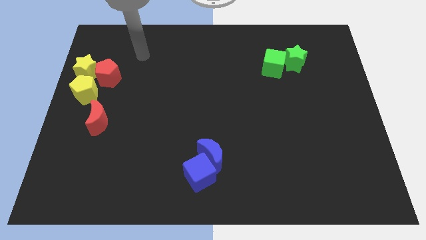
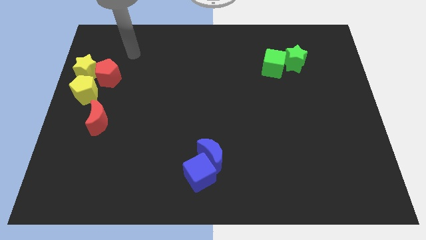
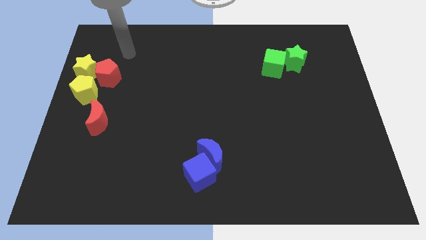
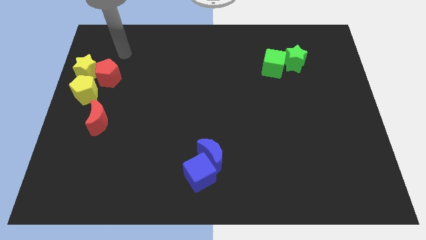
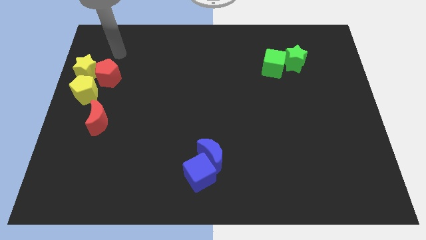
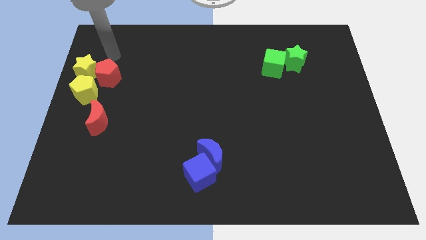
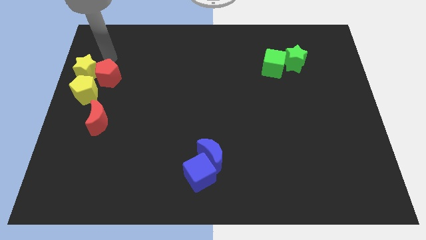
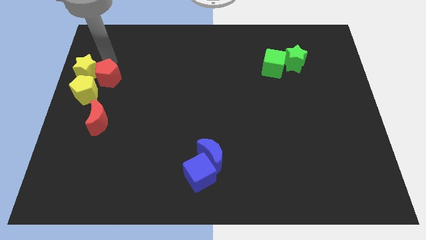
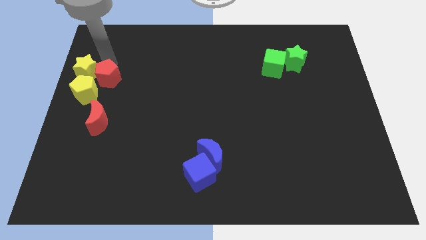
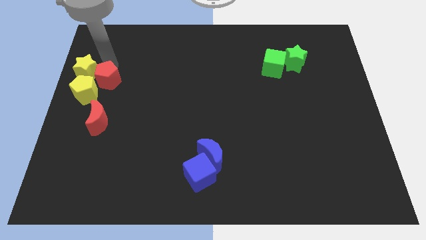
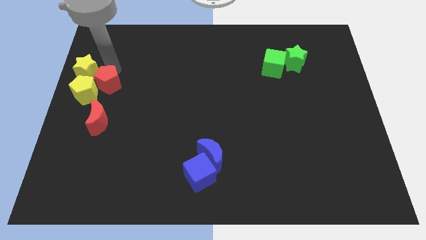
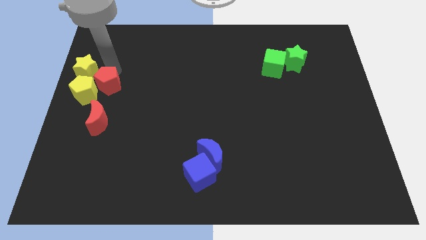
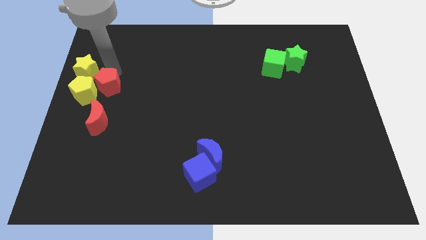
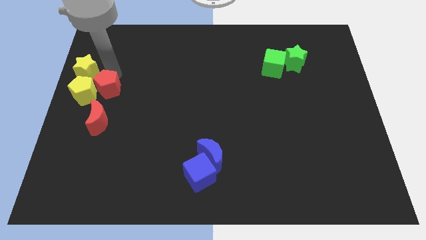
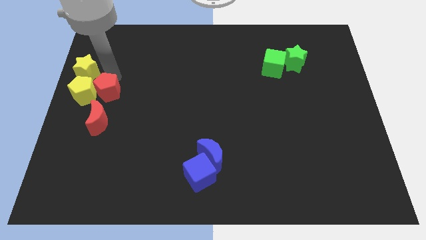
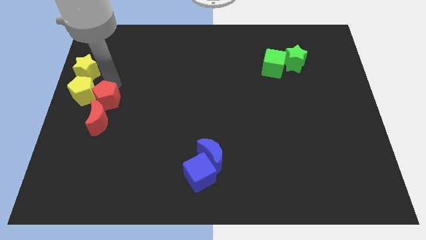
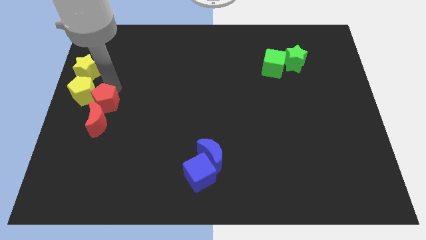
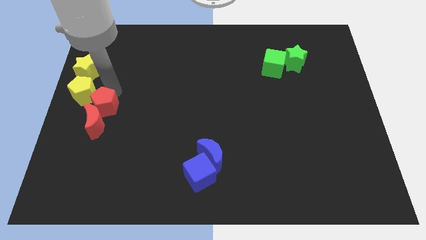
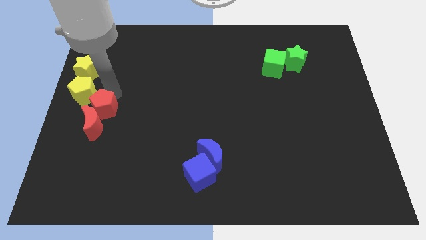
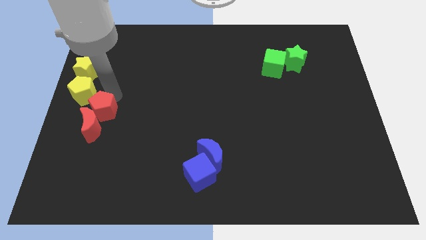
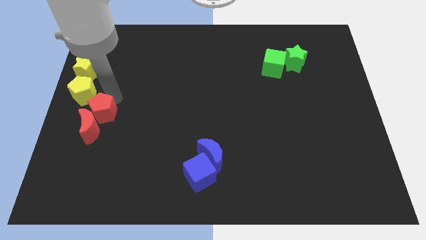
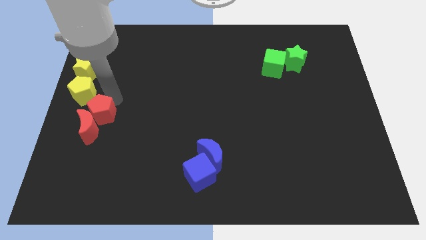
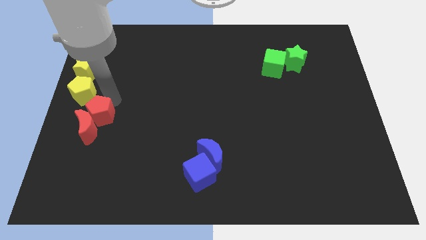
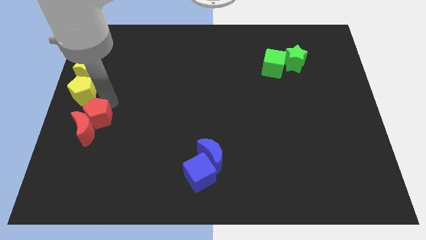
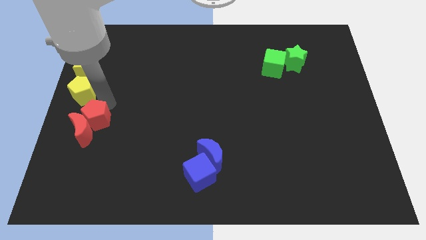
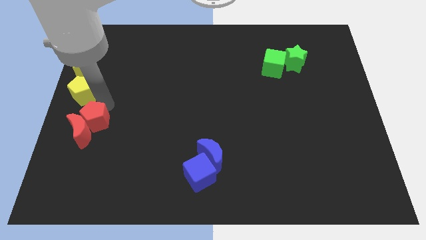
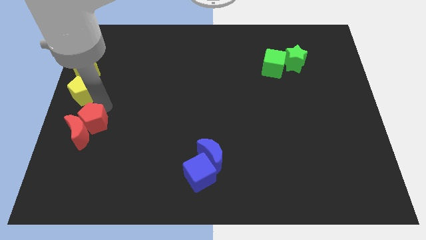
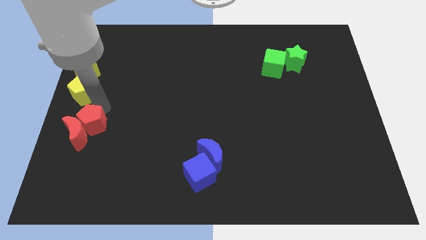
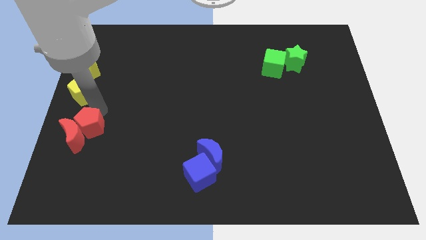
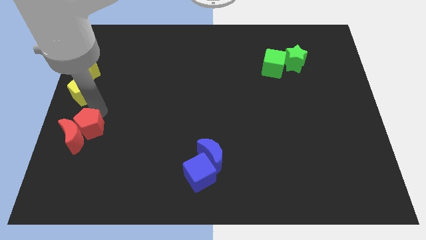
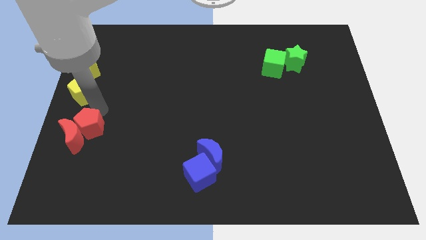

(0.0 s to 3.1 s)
push red blocks slightly down

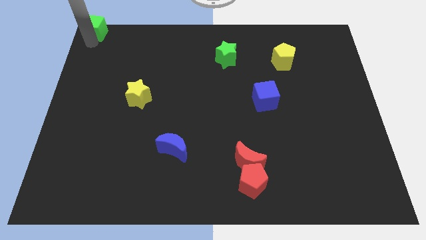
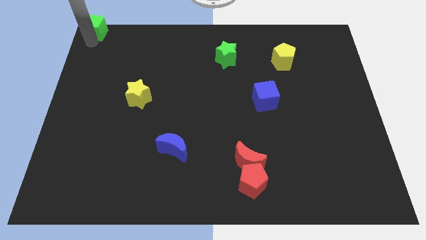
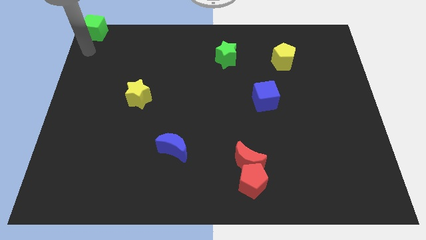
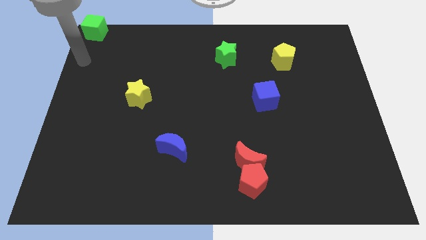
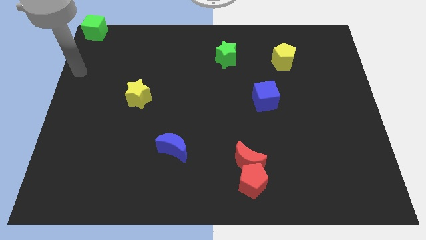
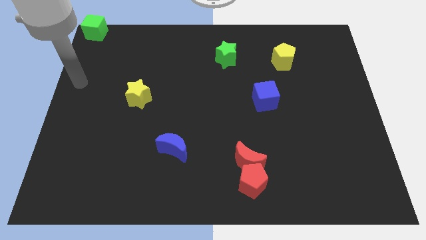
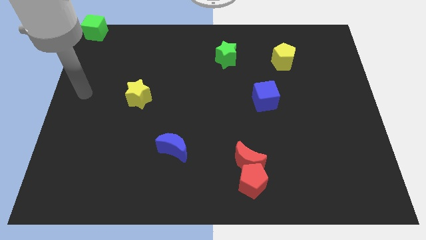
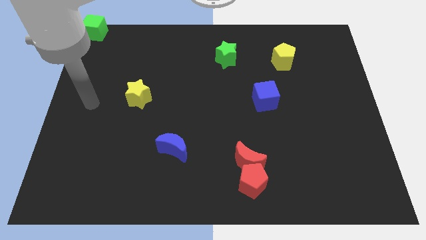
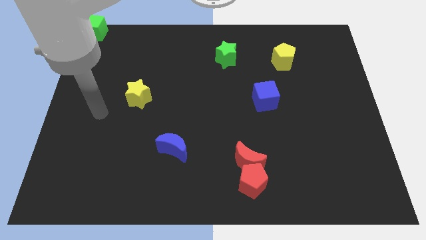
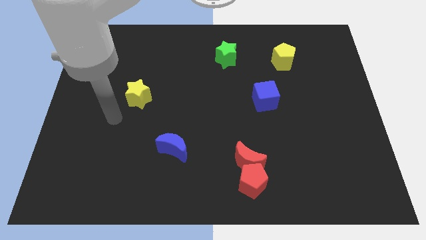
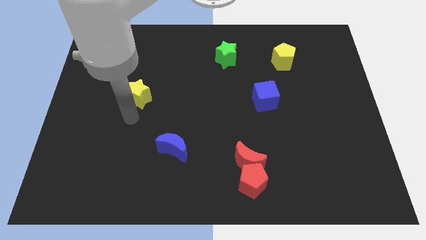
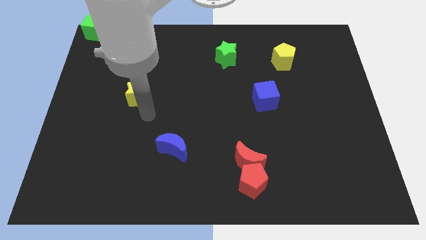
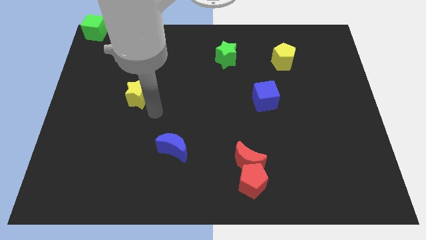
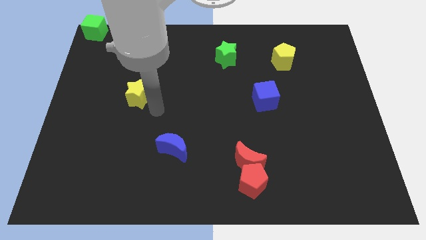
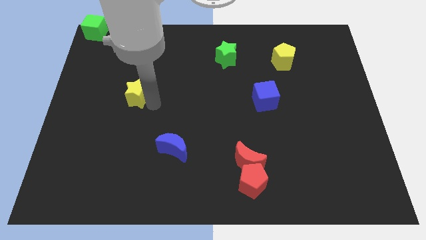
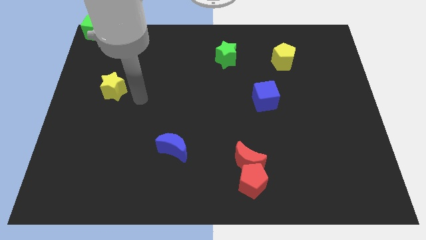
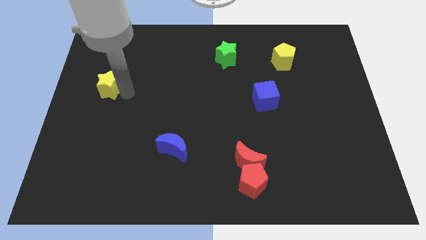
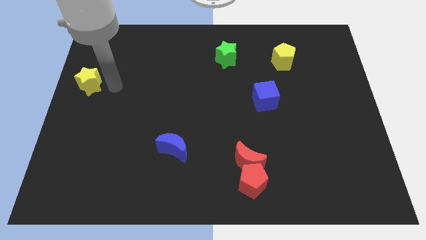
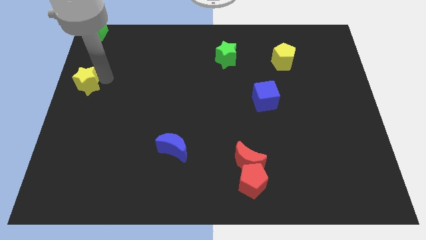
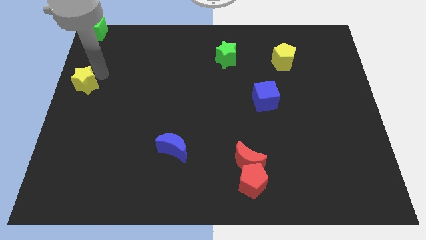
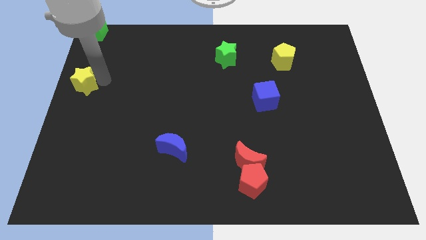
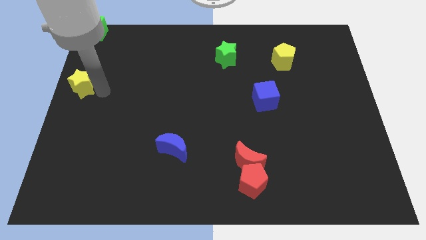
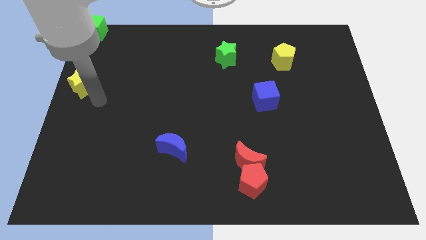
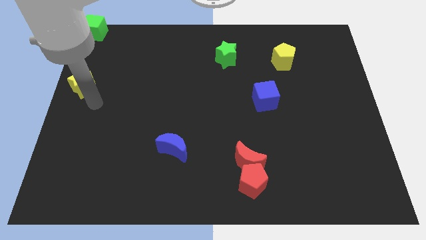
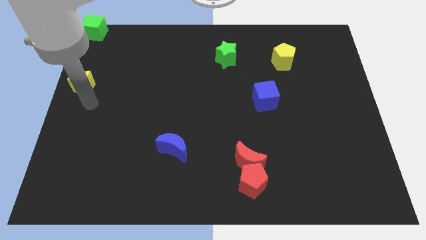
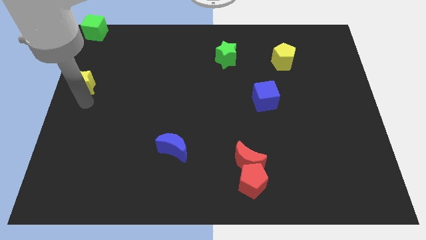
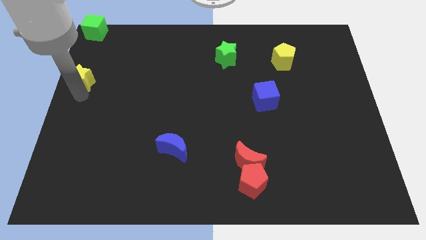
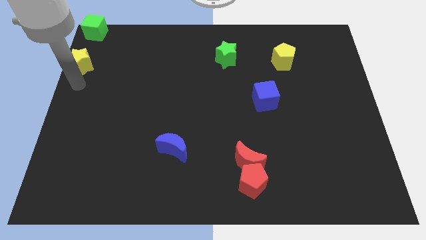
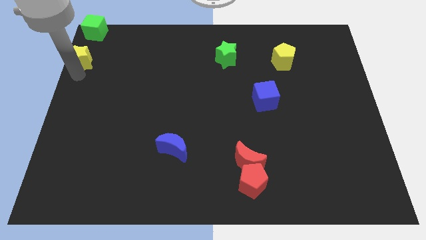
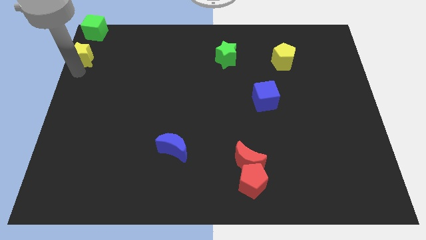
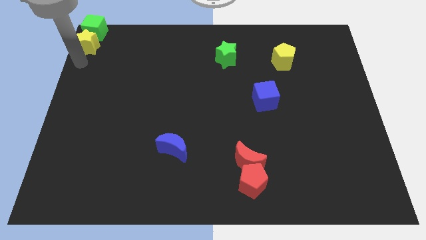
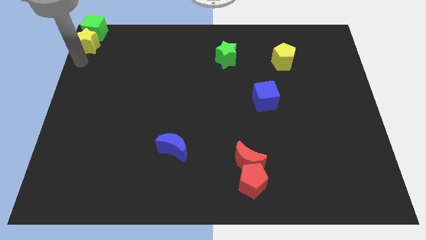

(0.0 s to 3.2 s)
place the yellow star to the bottom of green cube

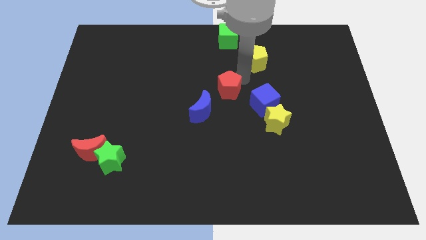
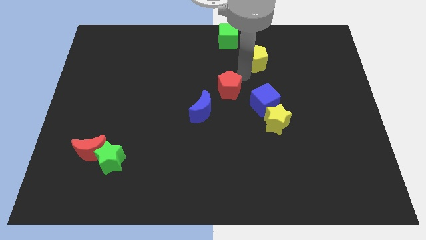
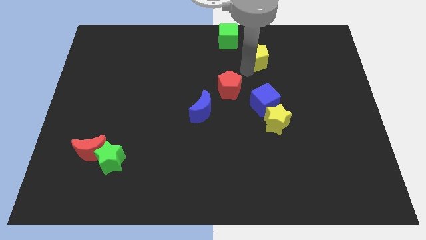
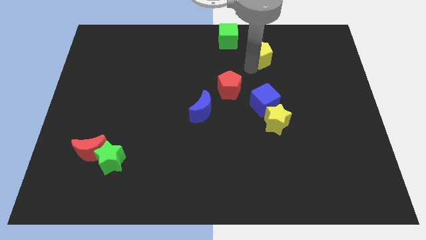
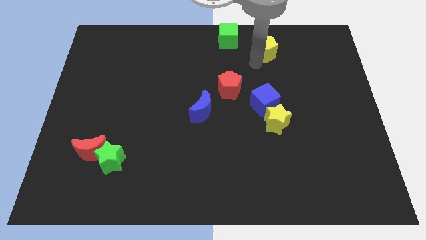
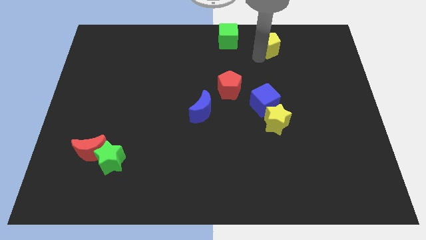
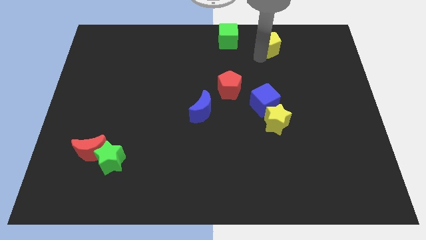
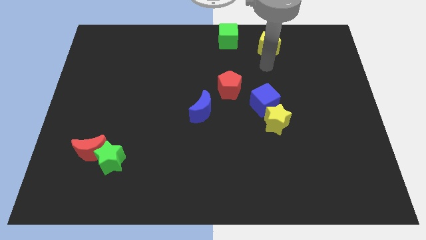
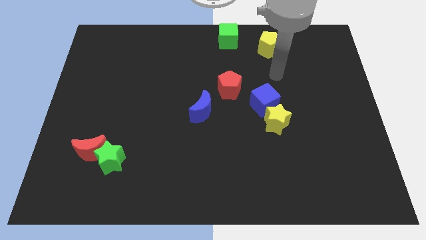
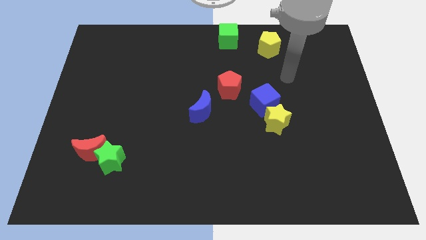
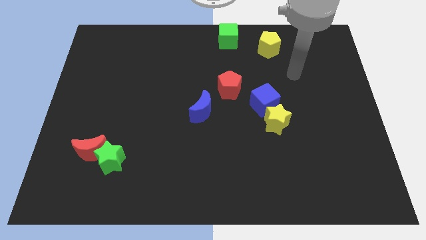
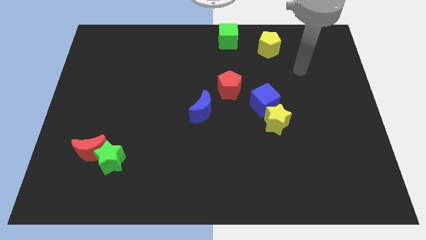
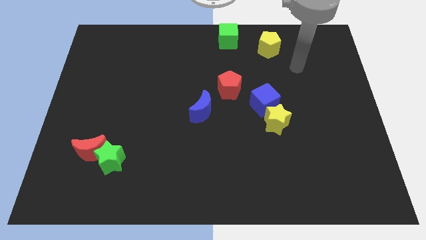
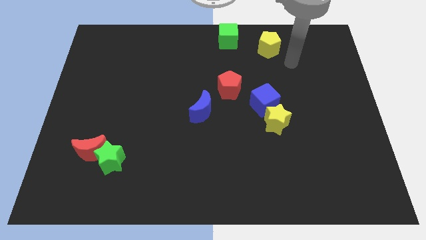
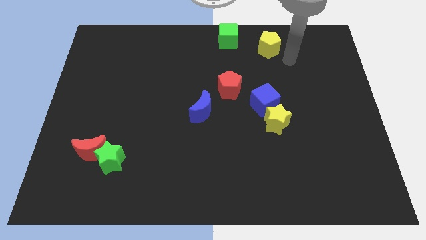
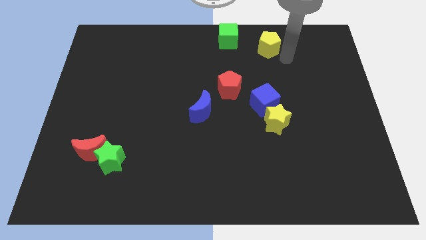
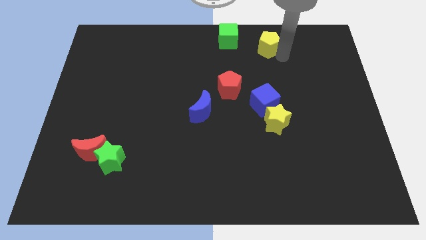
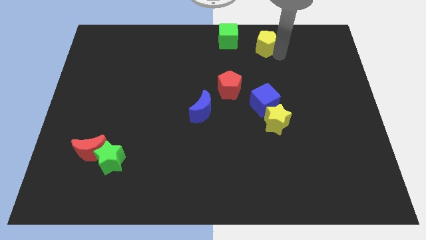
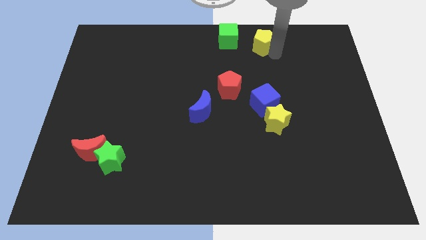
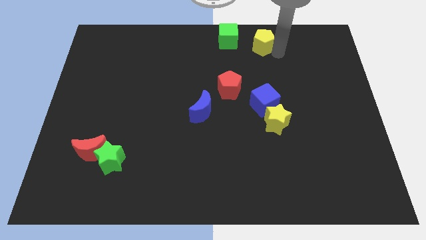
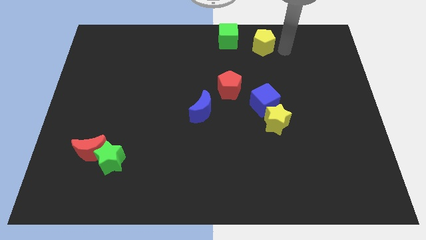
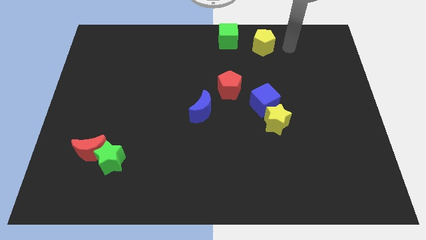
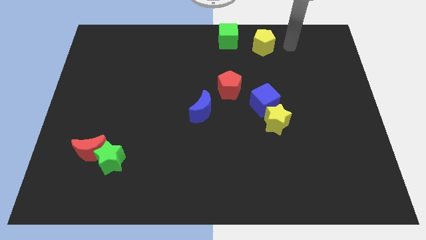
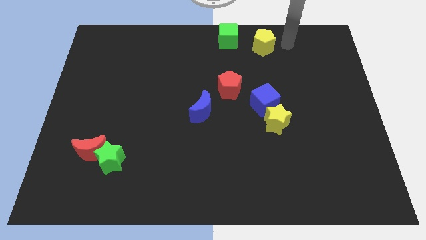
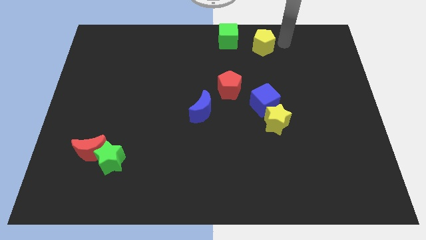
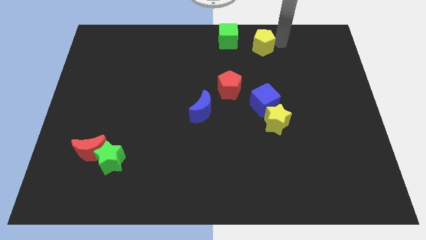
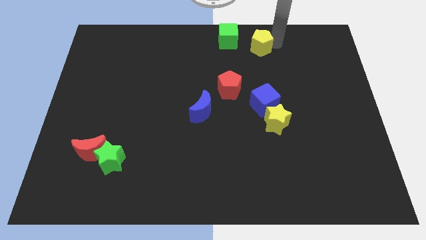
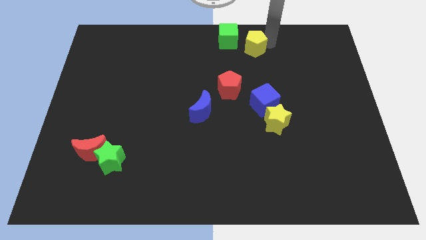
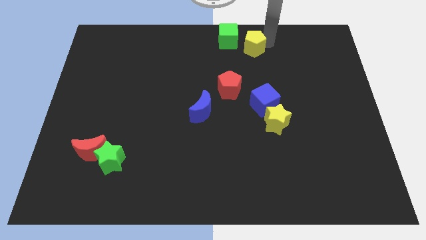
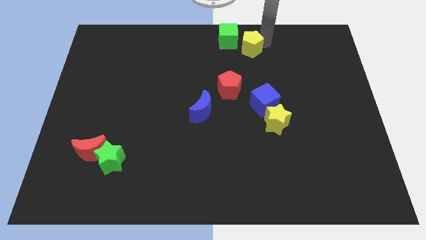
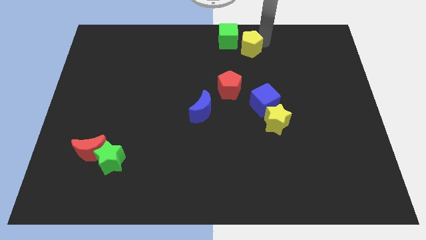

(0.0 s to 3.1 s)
push yellow pentagon slightly towards green star
